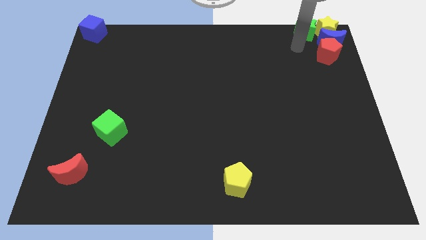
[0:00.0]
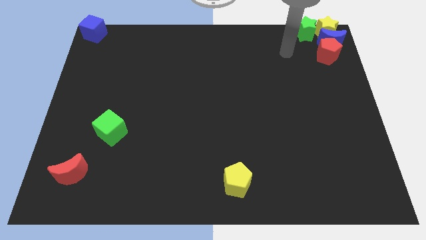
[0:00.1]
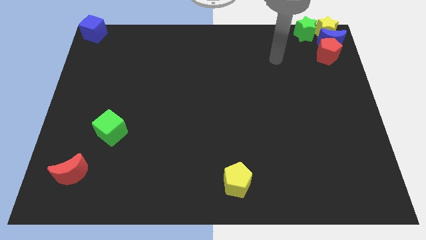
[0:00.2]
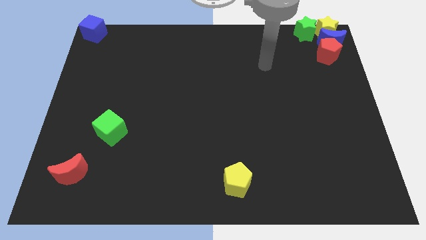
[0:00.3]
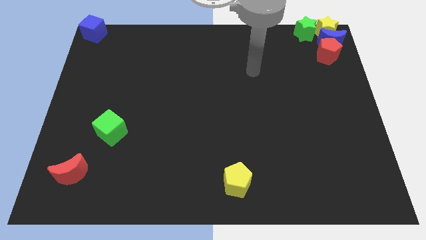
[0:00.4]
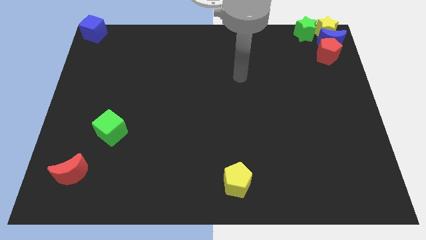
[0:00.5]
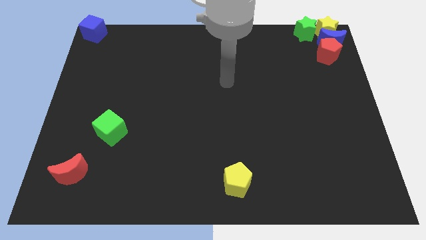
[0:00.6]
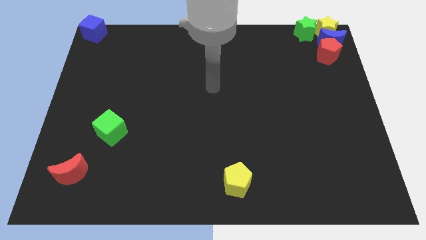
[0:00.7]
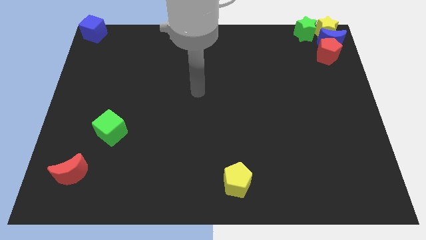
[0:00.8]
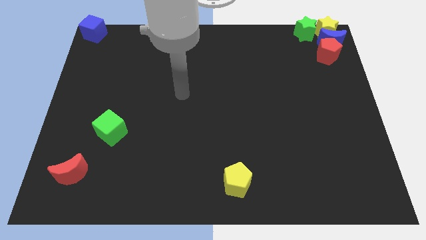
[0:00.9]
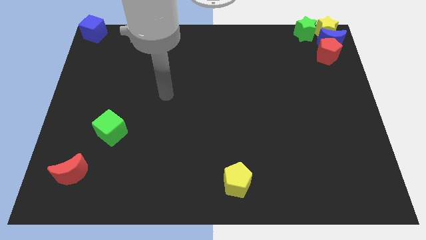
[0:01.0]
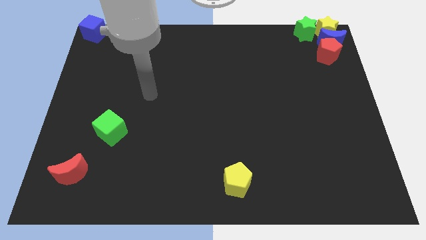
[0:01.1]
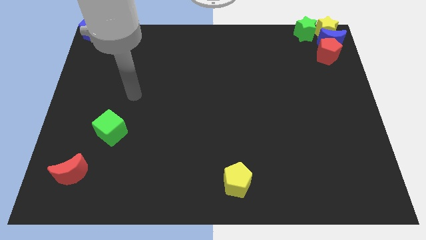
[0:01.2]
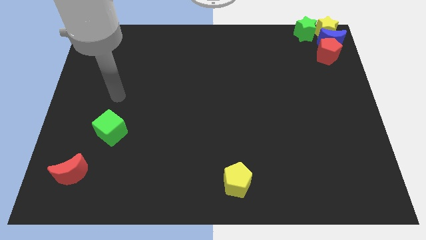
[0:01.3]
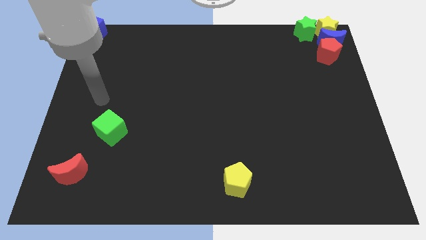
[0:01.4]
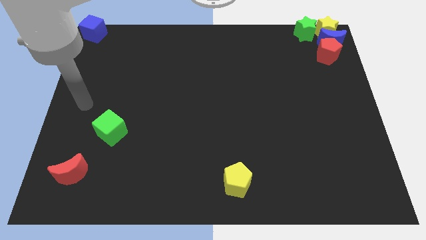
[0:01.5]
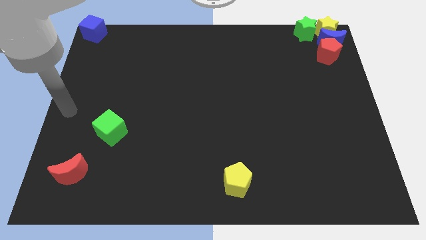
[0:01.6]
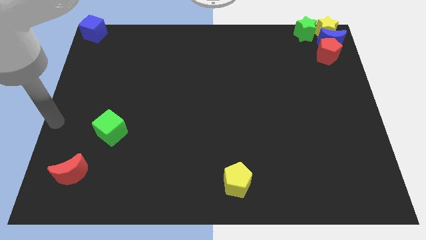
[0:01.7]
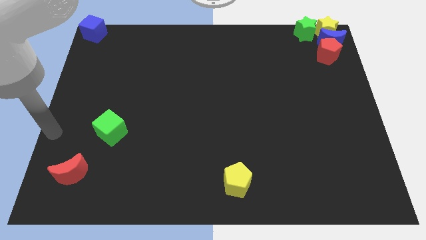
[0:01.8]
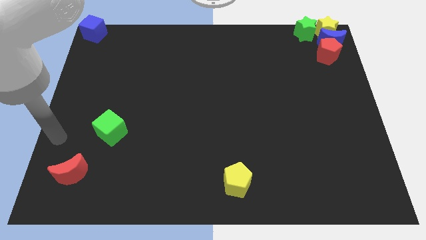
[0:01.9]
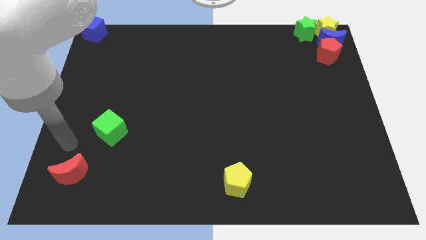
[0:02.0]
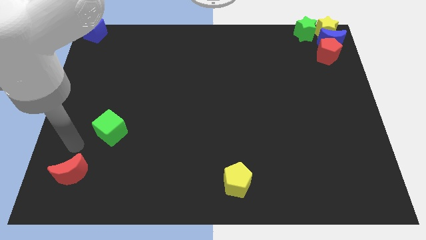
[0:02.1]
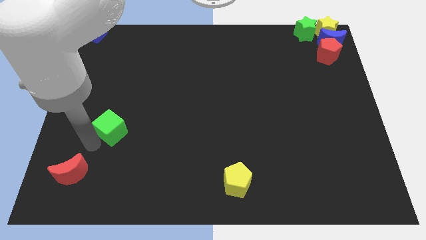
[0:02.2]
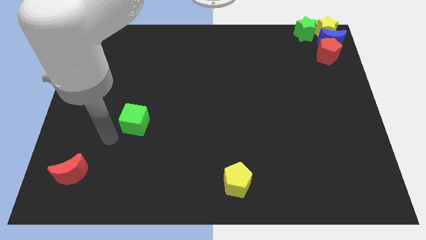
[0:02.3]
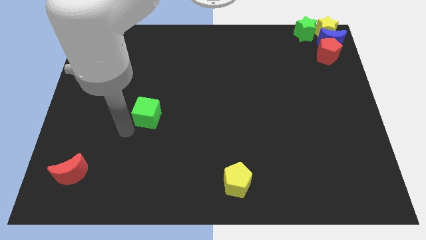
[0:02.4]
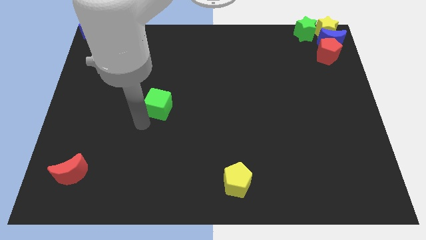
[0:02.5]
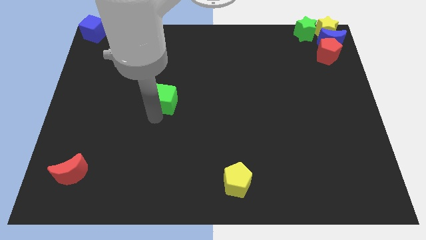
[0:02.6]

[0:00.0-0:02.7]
move the green cube to the center

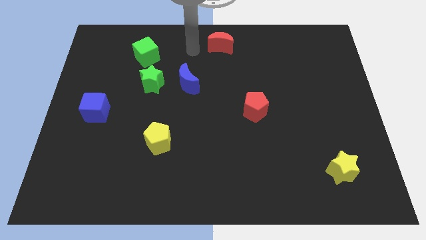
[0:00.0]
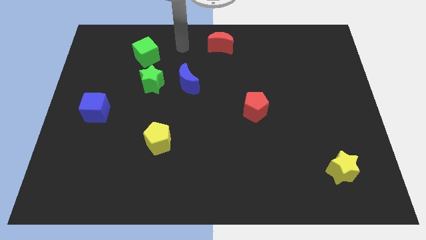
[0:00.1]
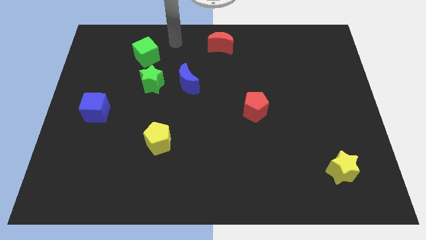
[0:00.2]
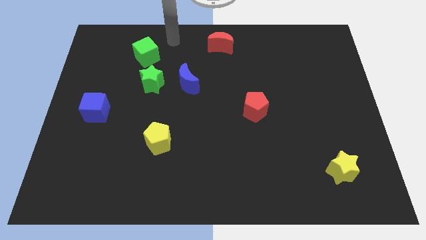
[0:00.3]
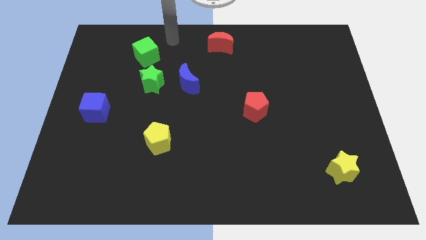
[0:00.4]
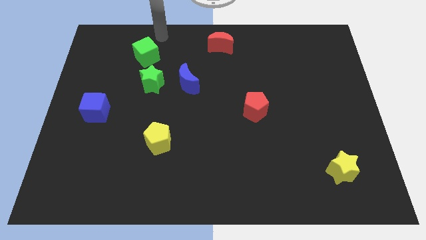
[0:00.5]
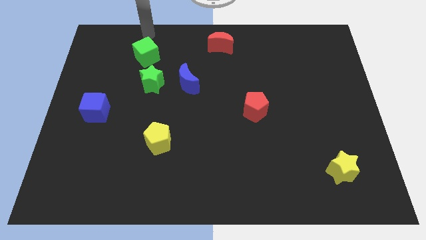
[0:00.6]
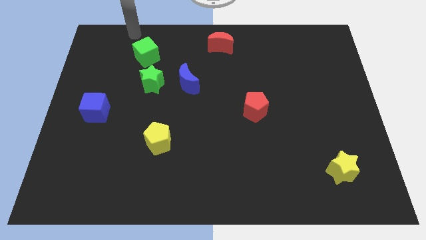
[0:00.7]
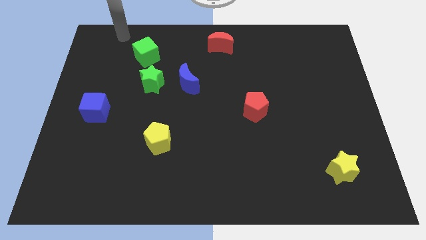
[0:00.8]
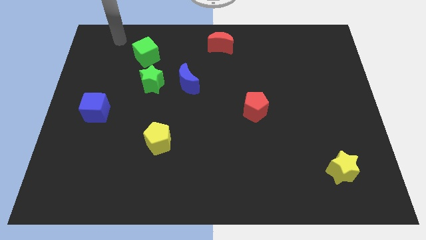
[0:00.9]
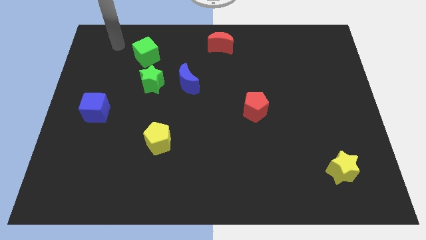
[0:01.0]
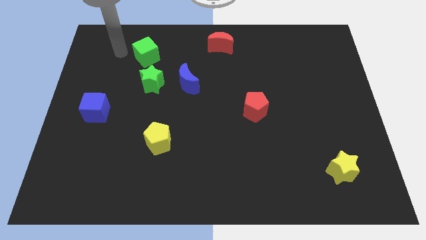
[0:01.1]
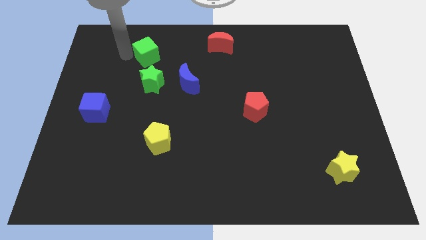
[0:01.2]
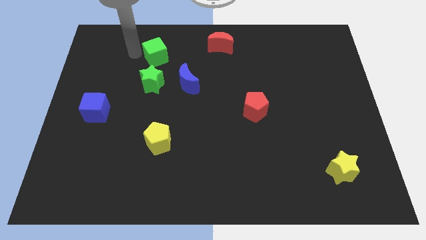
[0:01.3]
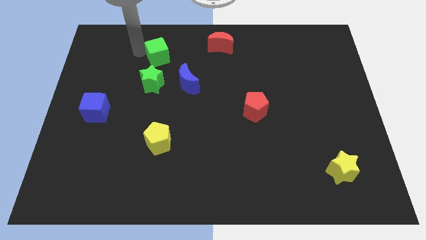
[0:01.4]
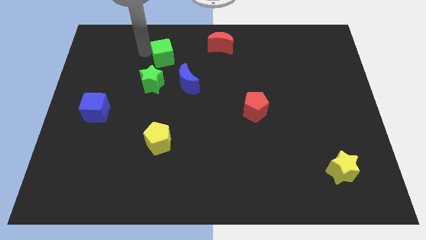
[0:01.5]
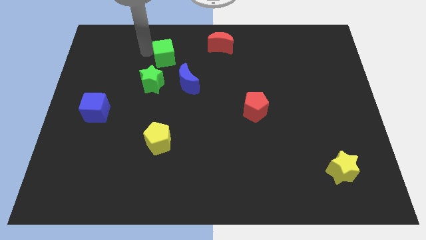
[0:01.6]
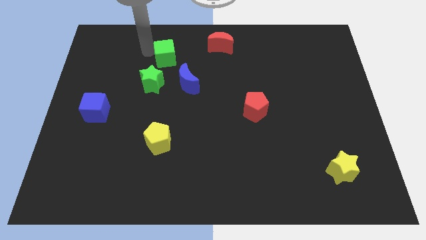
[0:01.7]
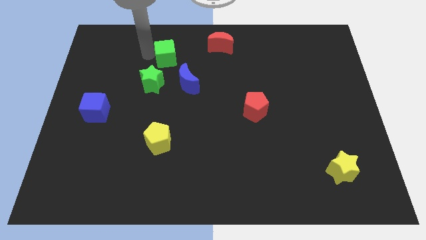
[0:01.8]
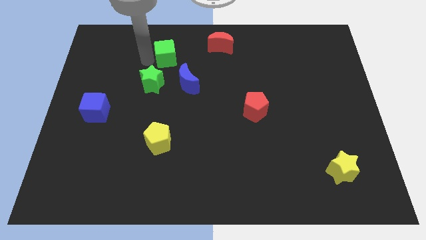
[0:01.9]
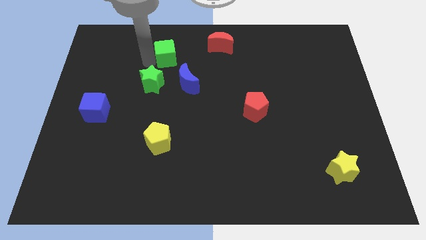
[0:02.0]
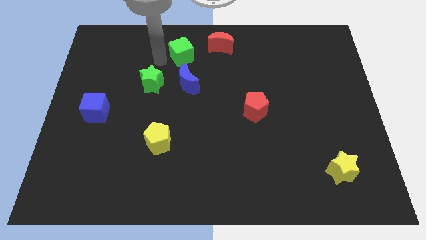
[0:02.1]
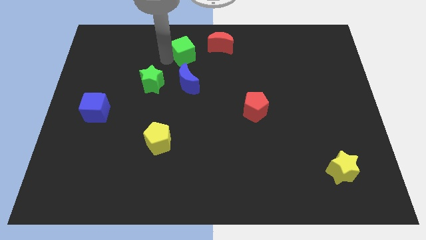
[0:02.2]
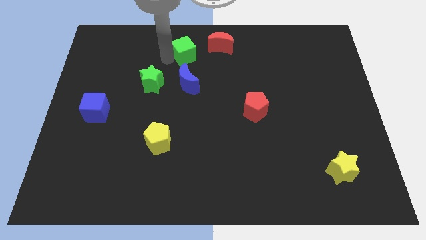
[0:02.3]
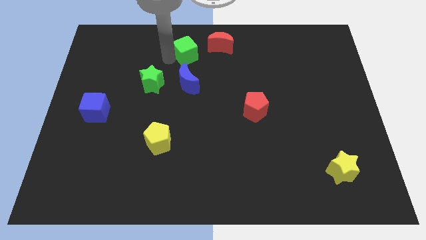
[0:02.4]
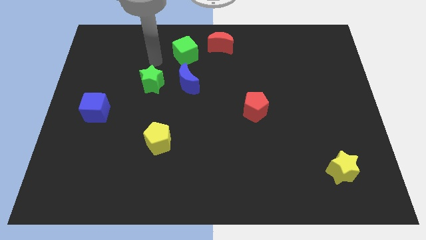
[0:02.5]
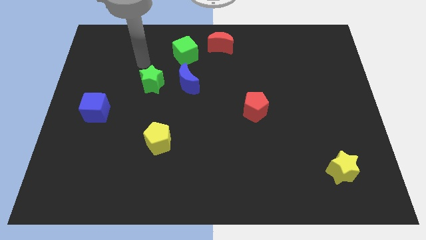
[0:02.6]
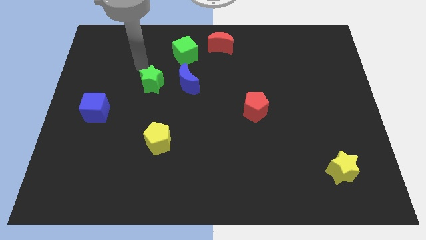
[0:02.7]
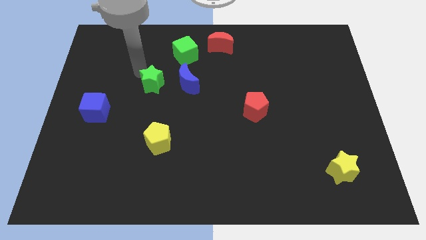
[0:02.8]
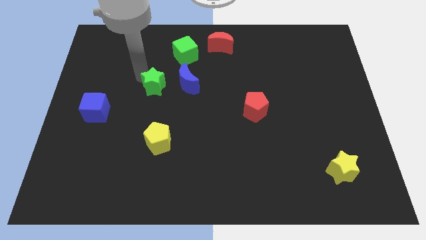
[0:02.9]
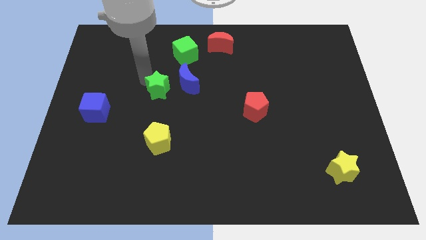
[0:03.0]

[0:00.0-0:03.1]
move the green cube on top of the blue crescent

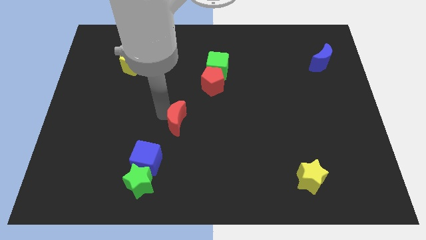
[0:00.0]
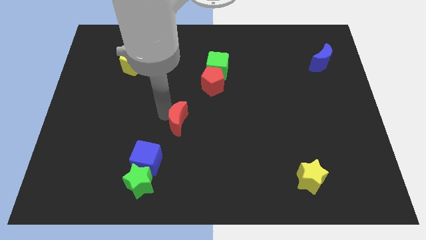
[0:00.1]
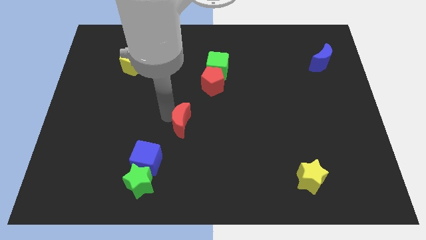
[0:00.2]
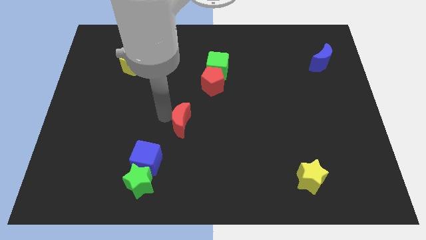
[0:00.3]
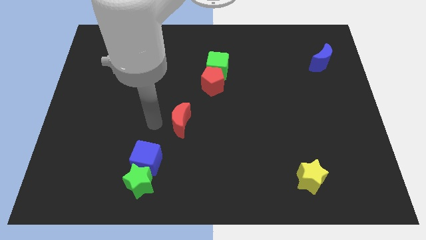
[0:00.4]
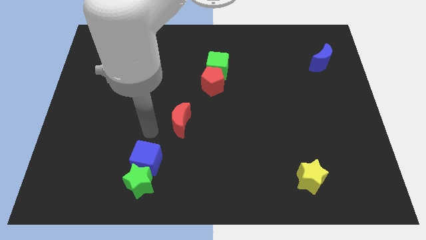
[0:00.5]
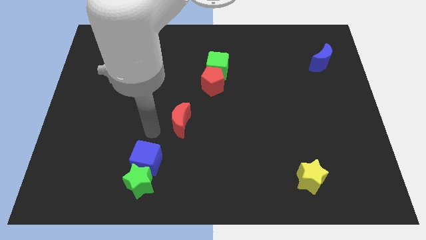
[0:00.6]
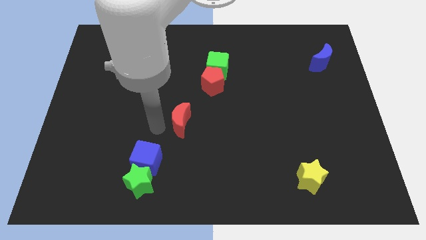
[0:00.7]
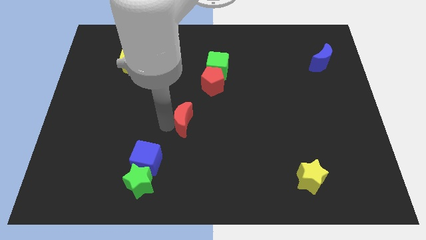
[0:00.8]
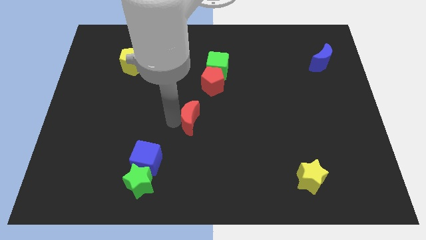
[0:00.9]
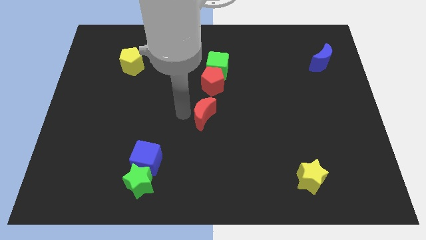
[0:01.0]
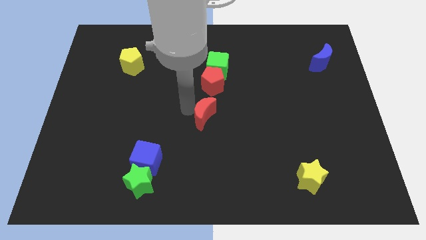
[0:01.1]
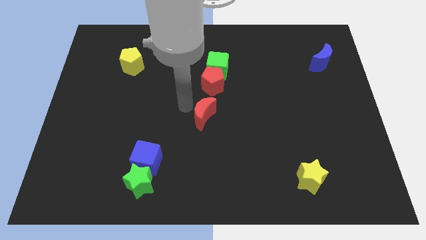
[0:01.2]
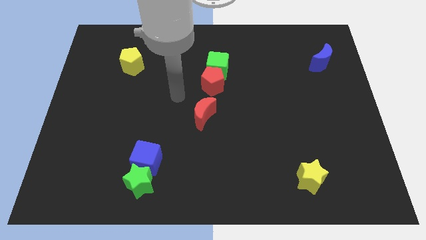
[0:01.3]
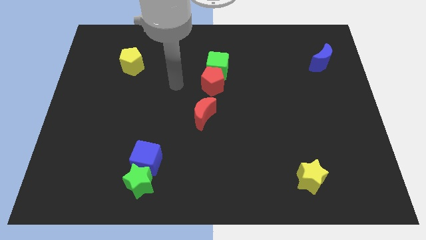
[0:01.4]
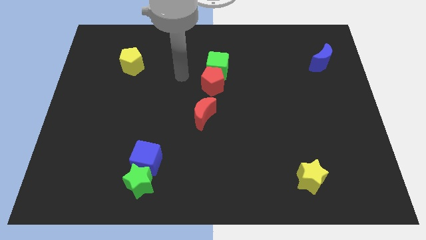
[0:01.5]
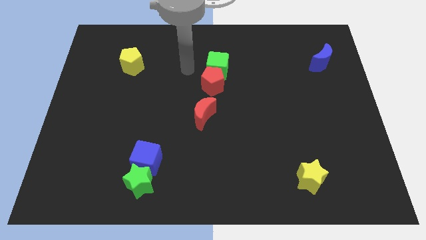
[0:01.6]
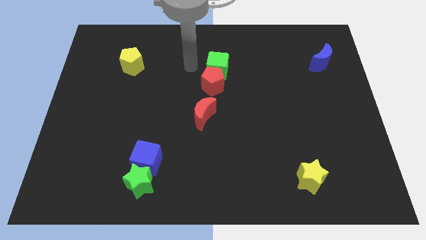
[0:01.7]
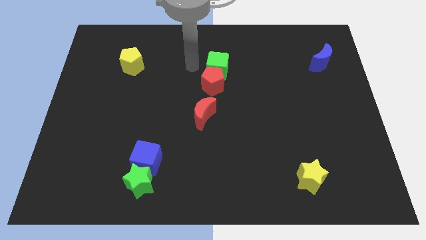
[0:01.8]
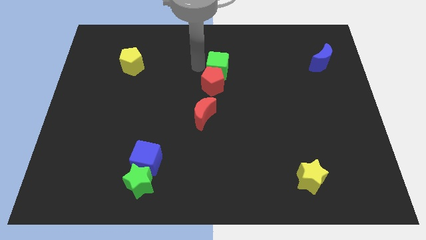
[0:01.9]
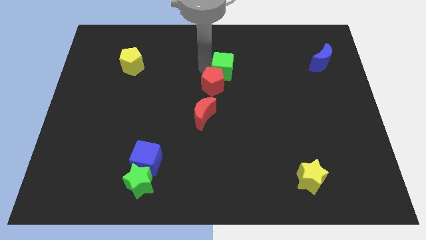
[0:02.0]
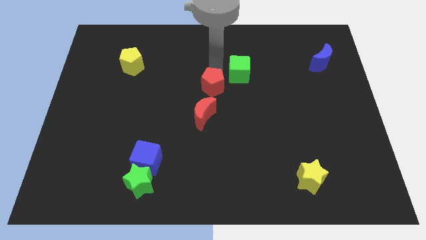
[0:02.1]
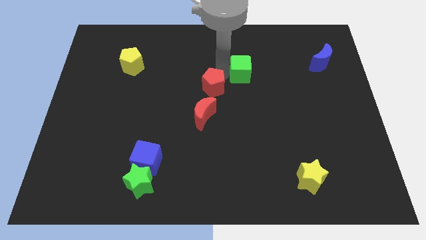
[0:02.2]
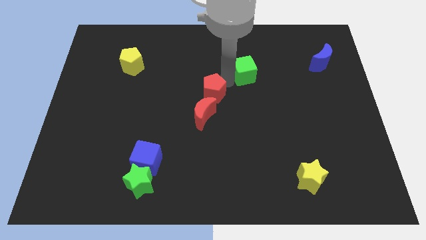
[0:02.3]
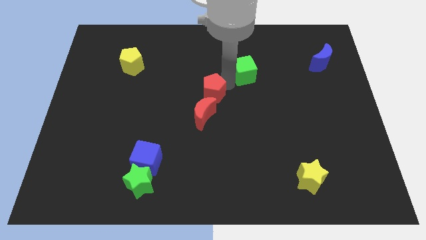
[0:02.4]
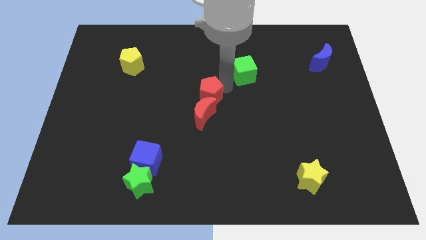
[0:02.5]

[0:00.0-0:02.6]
separate the red pentagon and blue cube

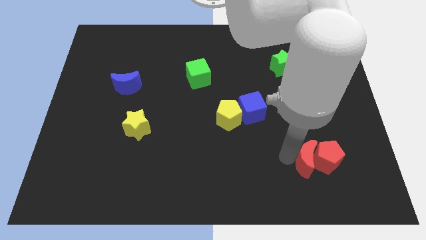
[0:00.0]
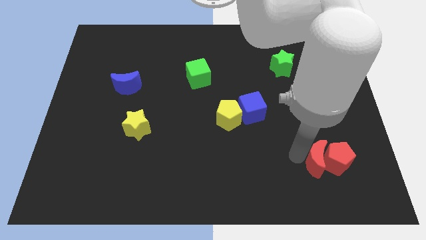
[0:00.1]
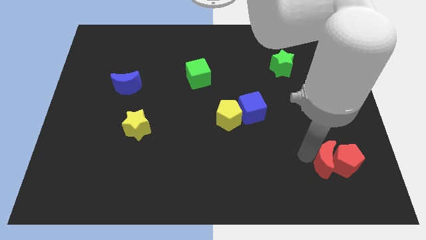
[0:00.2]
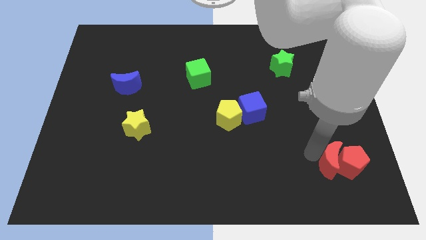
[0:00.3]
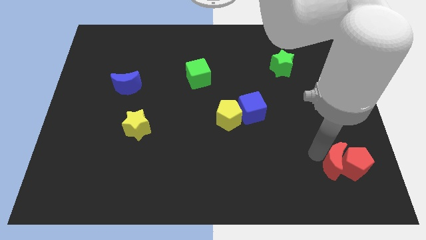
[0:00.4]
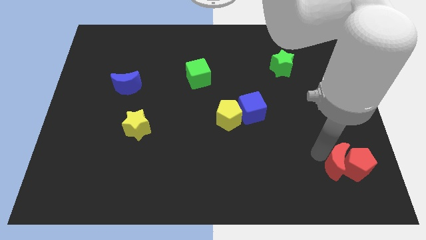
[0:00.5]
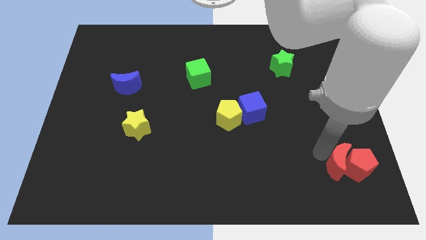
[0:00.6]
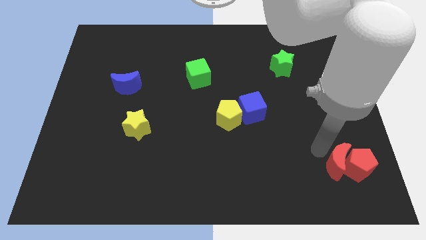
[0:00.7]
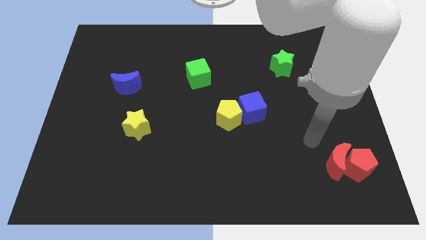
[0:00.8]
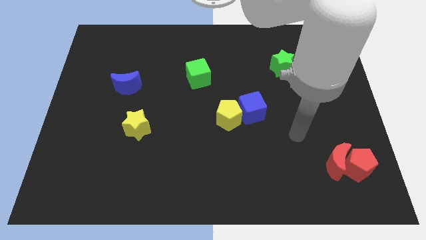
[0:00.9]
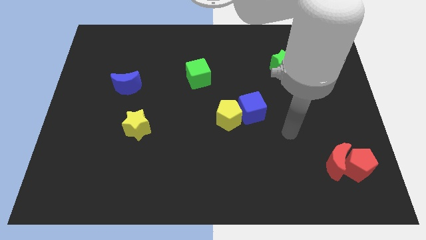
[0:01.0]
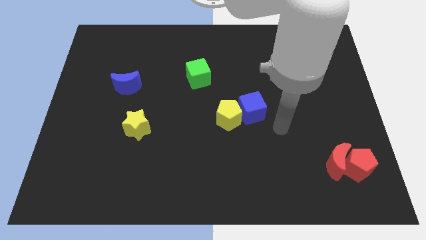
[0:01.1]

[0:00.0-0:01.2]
move the red blocks to the bottom right side of the board
